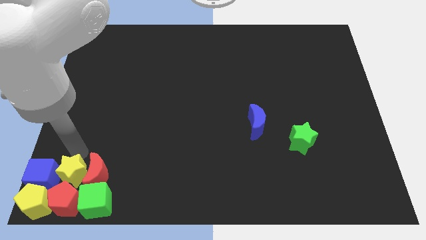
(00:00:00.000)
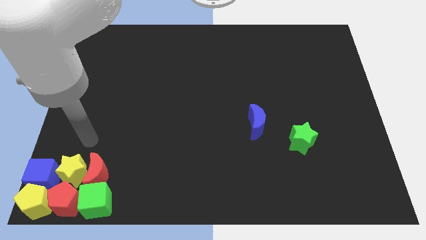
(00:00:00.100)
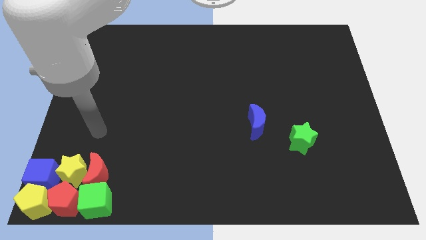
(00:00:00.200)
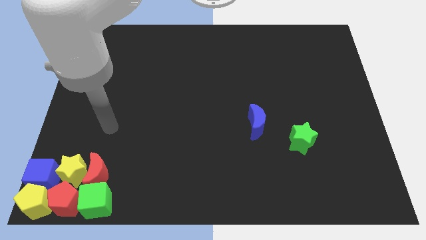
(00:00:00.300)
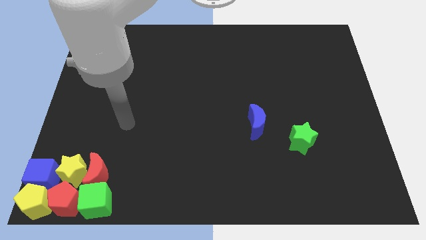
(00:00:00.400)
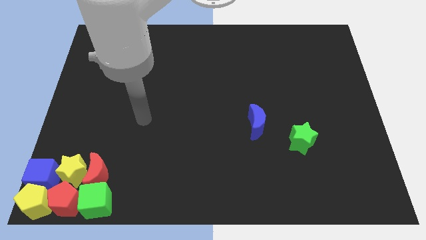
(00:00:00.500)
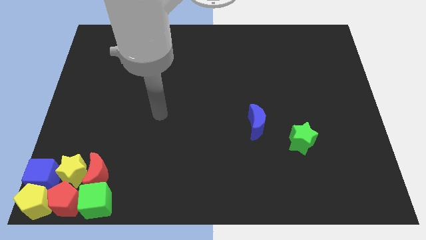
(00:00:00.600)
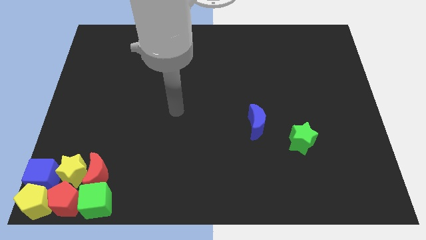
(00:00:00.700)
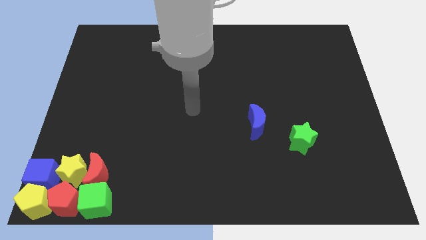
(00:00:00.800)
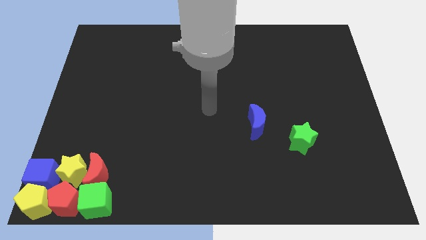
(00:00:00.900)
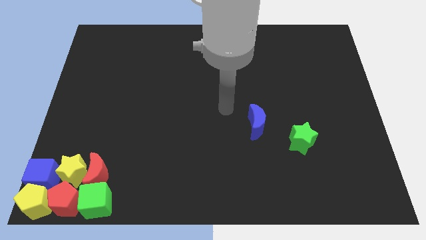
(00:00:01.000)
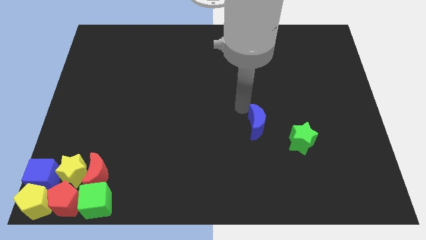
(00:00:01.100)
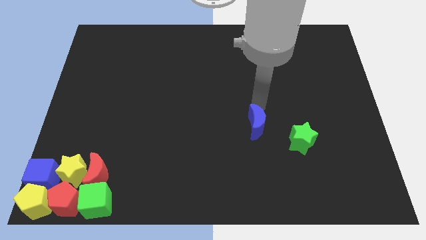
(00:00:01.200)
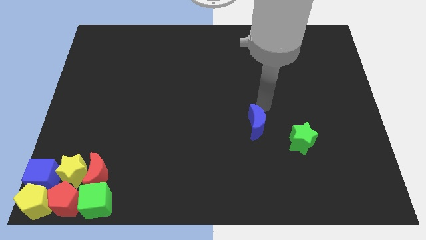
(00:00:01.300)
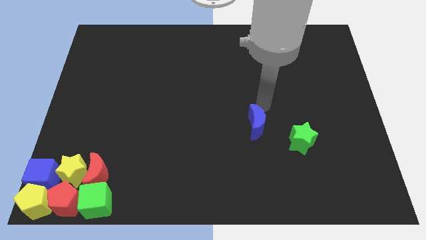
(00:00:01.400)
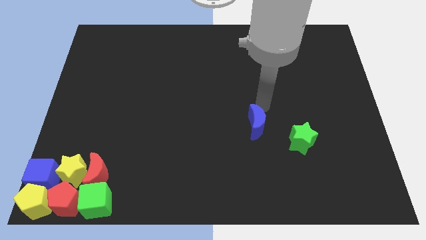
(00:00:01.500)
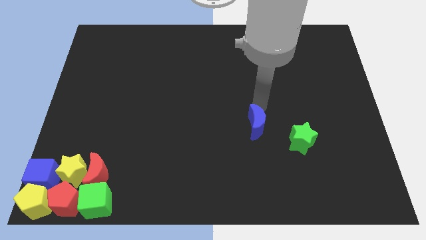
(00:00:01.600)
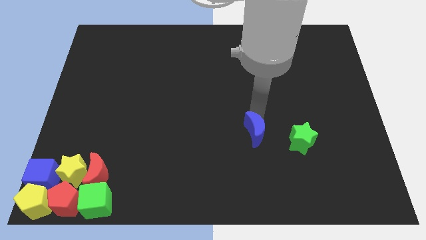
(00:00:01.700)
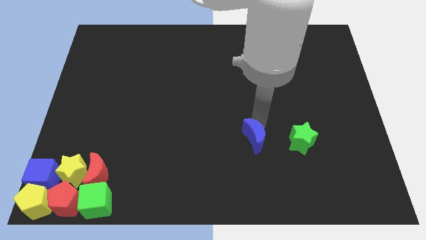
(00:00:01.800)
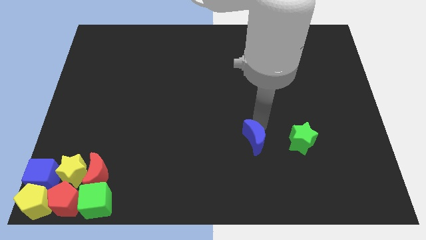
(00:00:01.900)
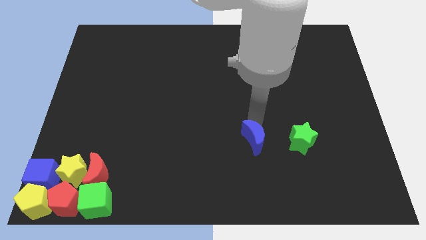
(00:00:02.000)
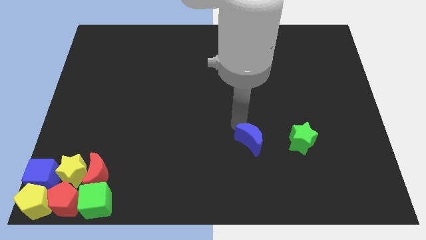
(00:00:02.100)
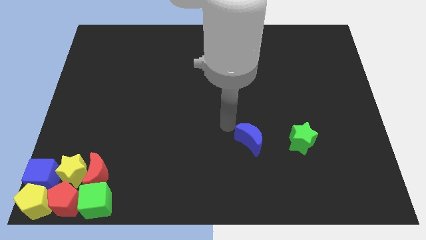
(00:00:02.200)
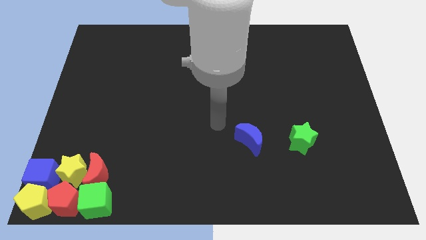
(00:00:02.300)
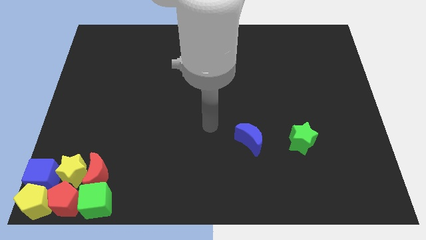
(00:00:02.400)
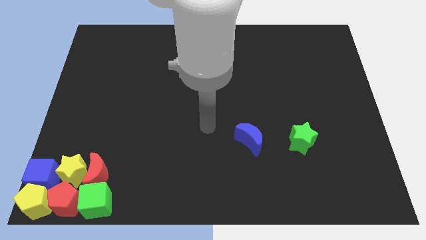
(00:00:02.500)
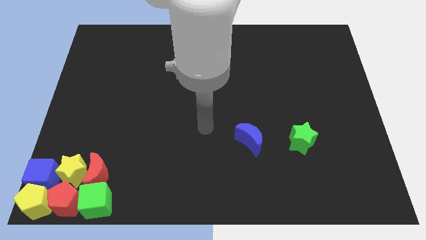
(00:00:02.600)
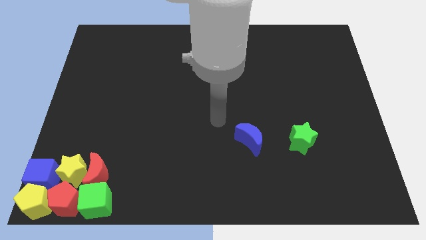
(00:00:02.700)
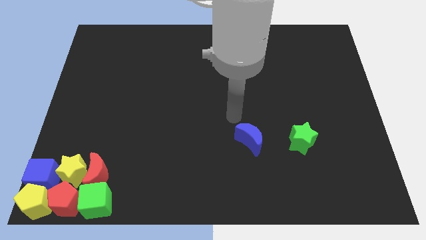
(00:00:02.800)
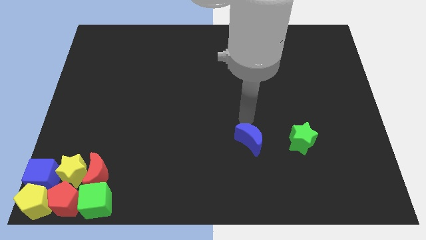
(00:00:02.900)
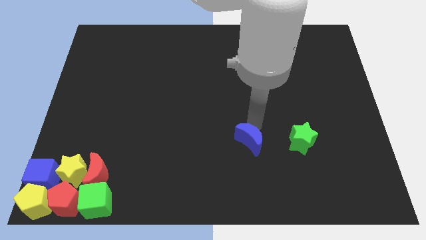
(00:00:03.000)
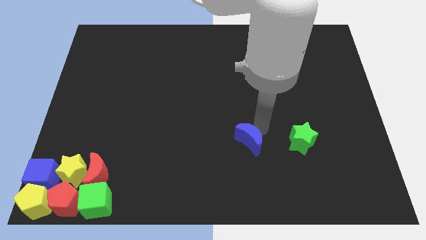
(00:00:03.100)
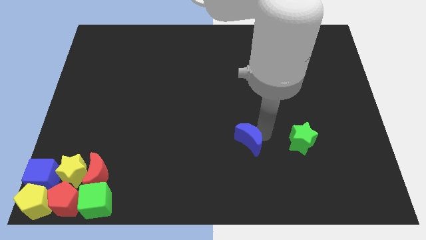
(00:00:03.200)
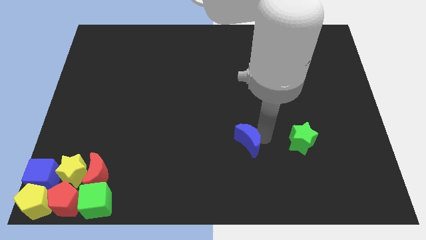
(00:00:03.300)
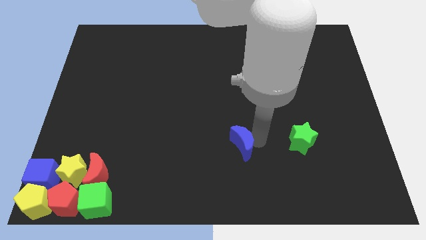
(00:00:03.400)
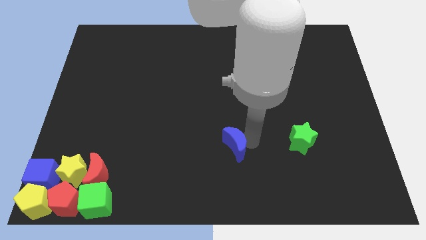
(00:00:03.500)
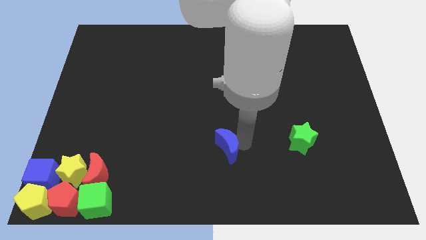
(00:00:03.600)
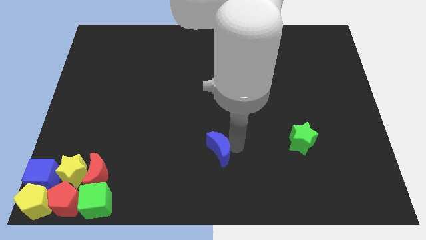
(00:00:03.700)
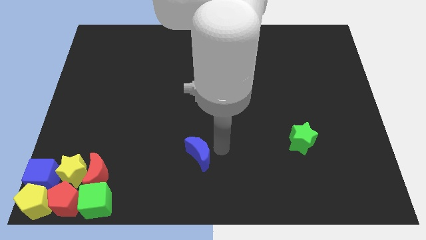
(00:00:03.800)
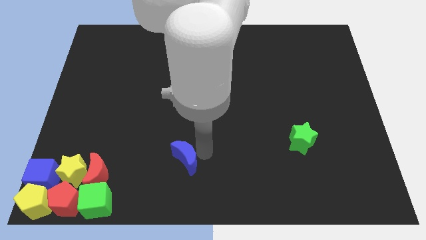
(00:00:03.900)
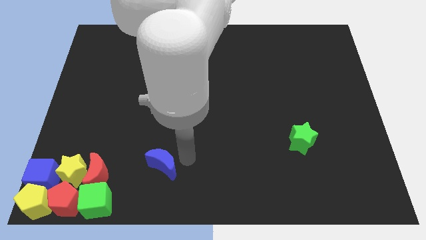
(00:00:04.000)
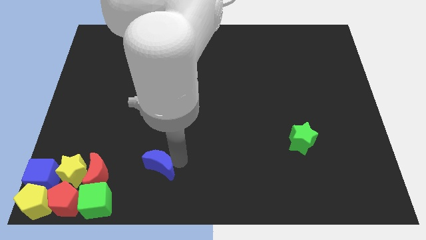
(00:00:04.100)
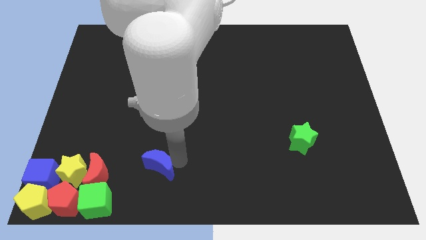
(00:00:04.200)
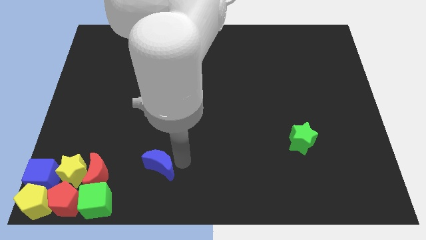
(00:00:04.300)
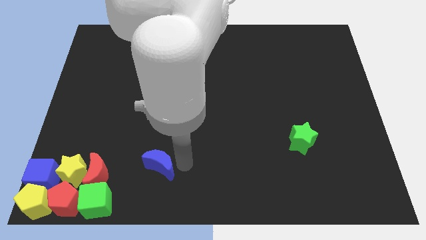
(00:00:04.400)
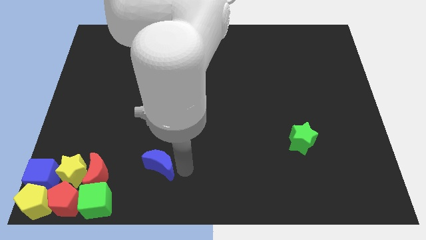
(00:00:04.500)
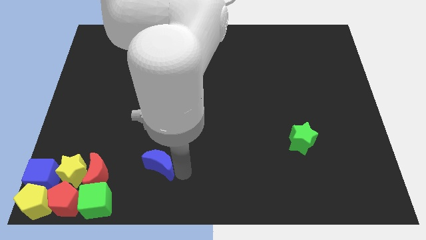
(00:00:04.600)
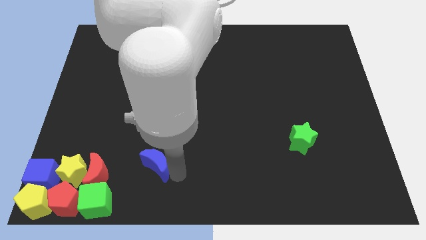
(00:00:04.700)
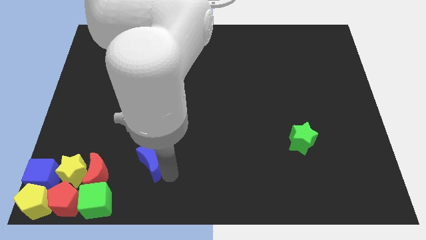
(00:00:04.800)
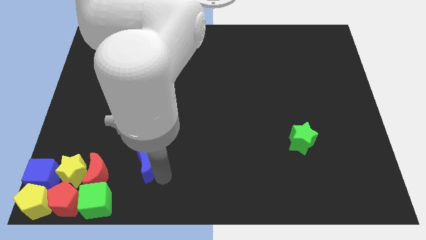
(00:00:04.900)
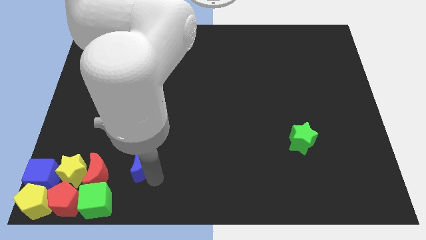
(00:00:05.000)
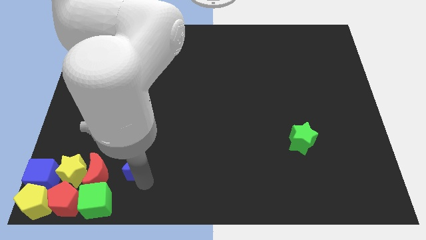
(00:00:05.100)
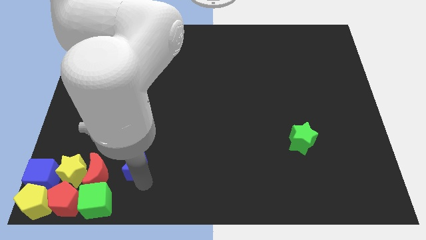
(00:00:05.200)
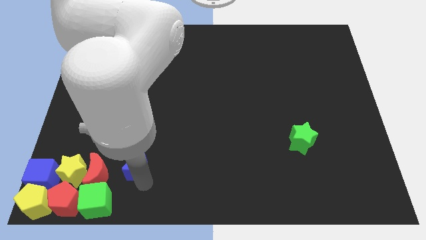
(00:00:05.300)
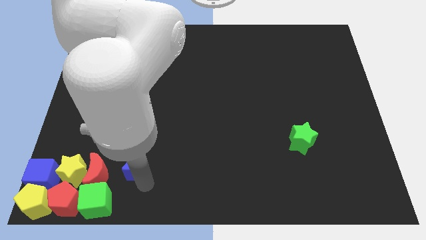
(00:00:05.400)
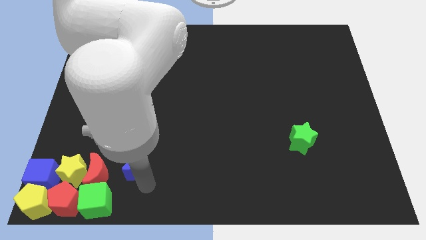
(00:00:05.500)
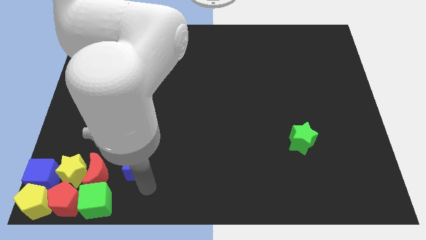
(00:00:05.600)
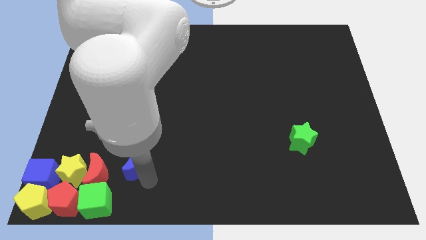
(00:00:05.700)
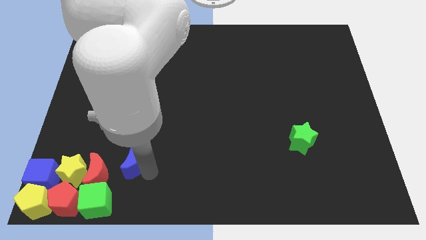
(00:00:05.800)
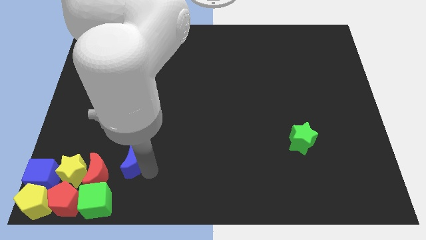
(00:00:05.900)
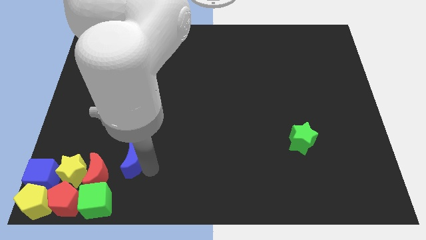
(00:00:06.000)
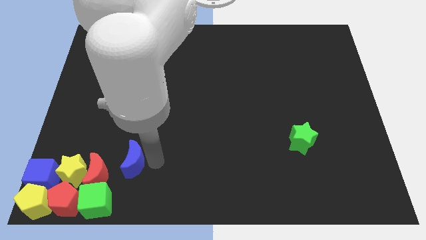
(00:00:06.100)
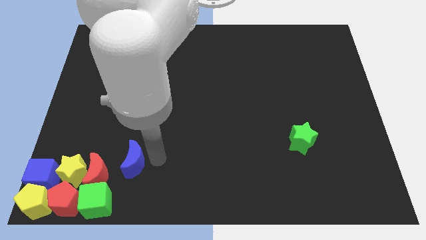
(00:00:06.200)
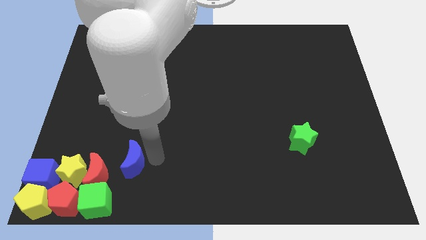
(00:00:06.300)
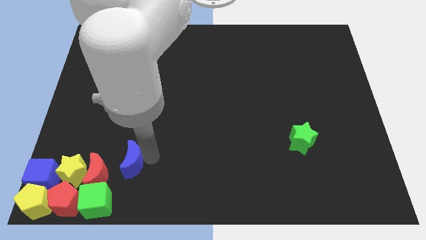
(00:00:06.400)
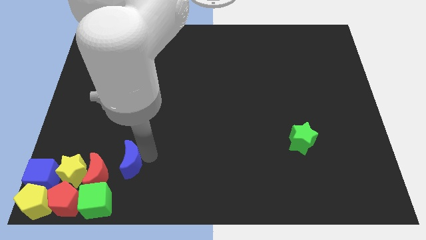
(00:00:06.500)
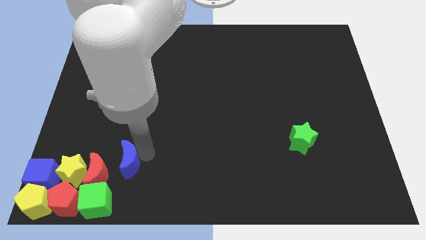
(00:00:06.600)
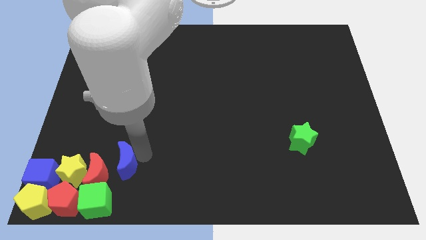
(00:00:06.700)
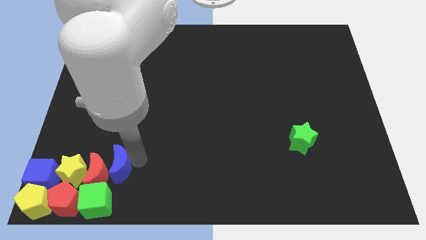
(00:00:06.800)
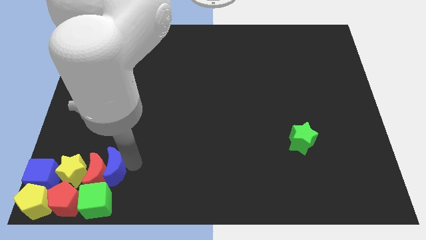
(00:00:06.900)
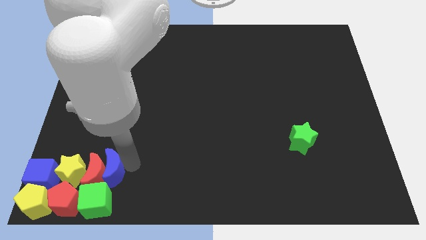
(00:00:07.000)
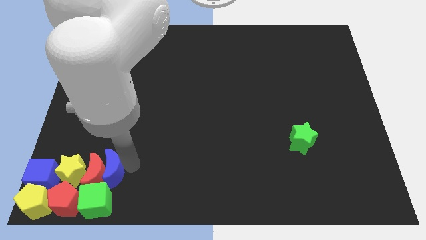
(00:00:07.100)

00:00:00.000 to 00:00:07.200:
move the blue crescent into the red crescent

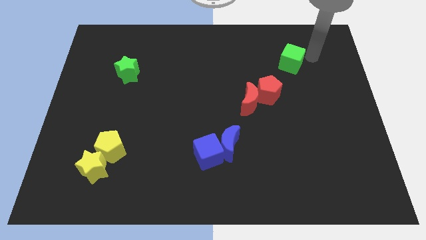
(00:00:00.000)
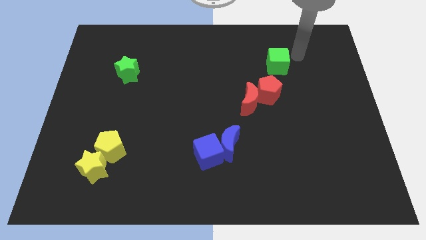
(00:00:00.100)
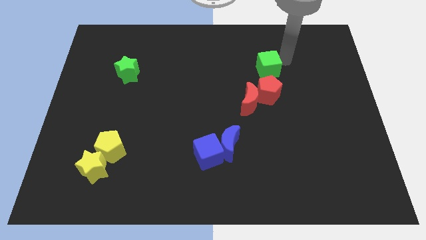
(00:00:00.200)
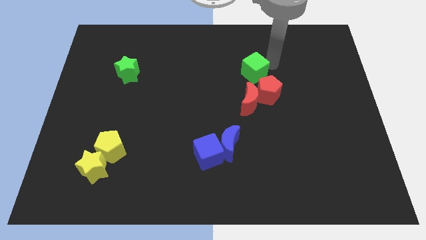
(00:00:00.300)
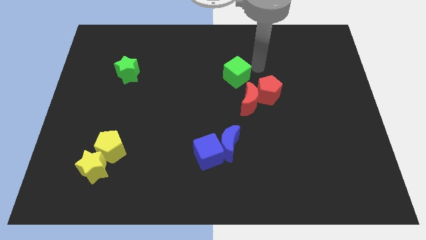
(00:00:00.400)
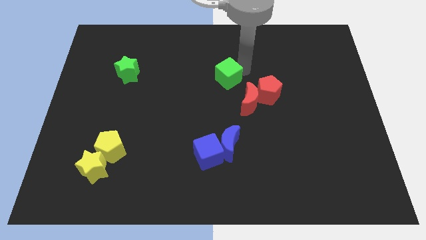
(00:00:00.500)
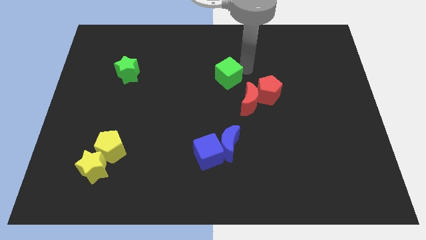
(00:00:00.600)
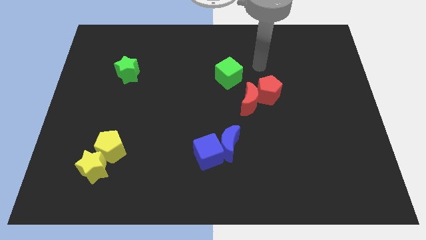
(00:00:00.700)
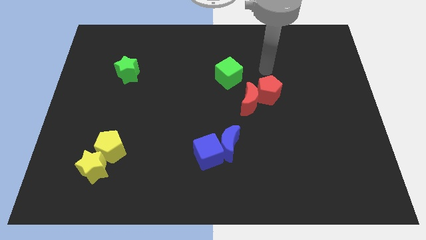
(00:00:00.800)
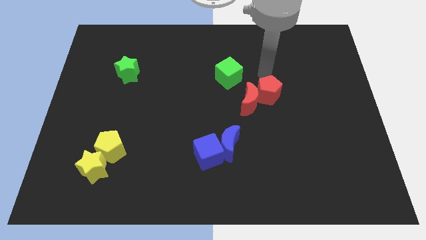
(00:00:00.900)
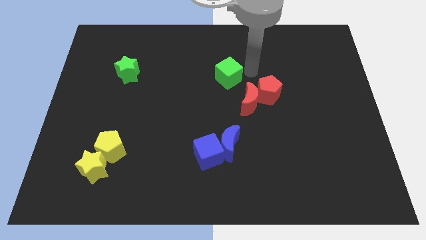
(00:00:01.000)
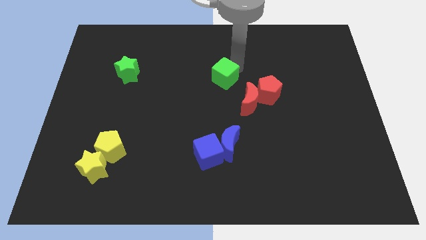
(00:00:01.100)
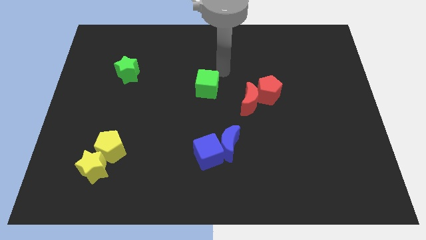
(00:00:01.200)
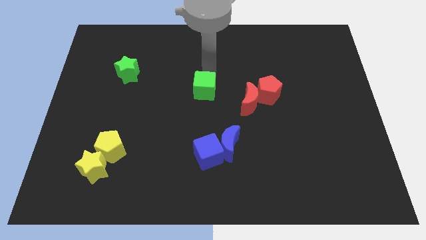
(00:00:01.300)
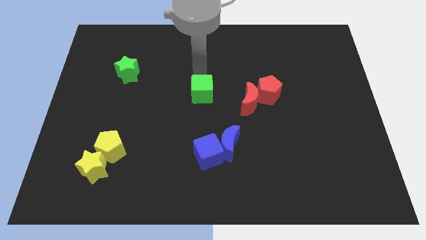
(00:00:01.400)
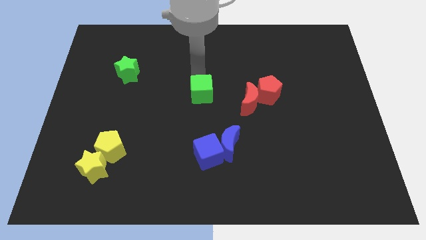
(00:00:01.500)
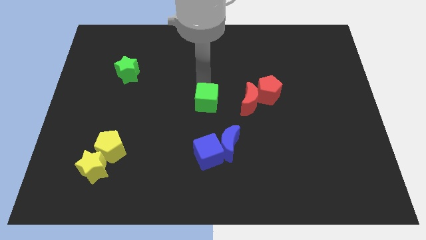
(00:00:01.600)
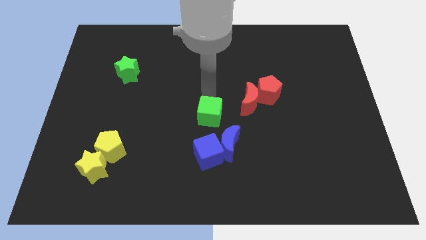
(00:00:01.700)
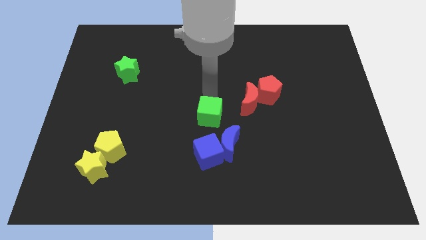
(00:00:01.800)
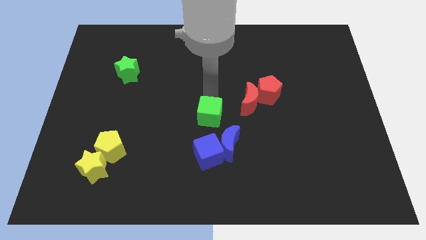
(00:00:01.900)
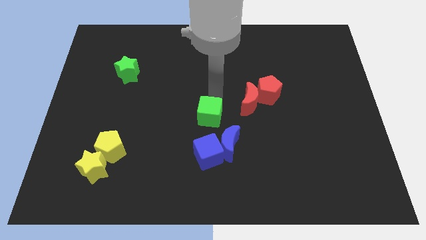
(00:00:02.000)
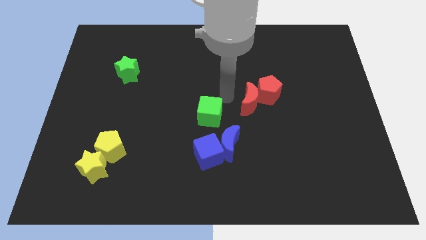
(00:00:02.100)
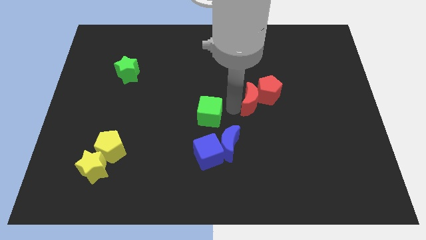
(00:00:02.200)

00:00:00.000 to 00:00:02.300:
move the green cube above the blue cube
